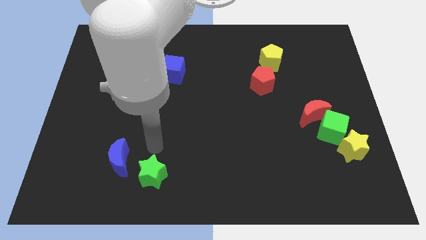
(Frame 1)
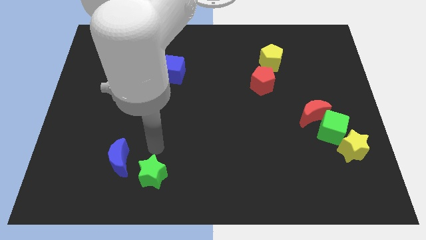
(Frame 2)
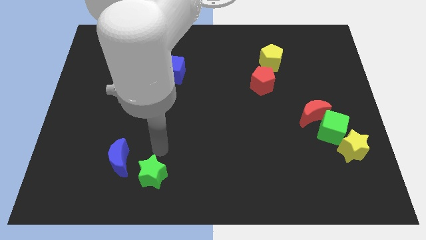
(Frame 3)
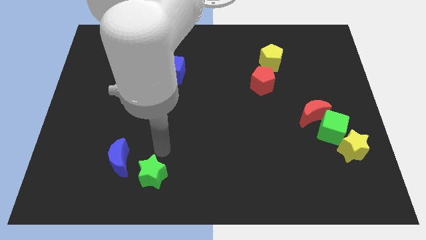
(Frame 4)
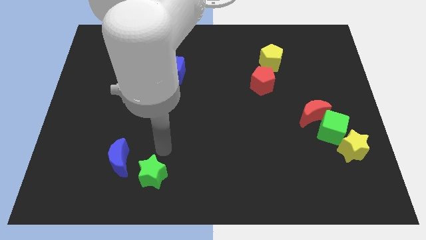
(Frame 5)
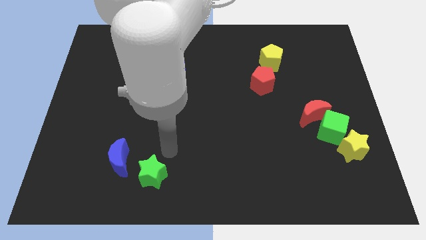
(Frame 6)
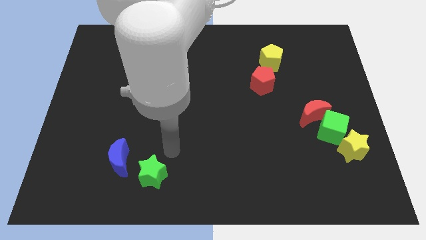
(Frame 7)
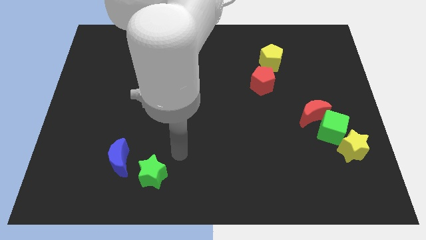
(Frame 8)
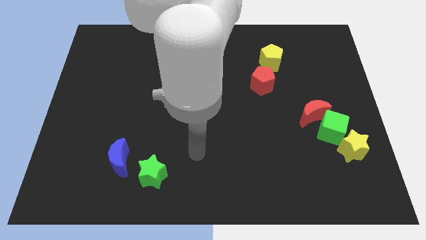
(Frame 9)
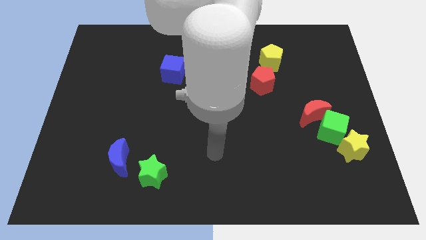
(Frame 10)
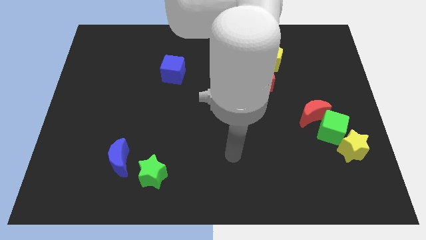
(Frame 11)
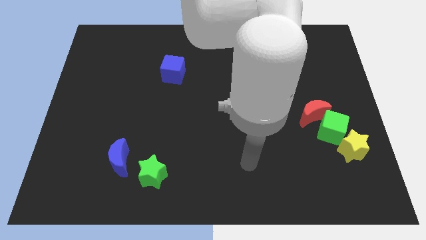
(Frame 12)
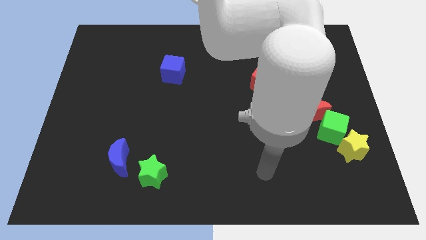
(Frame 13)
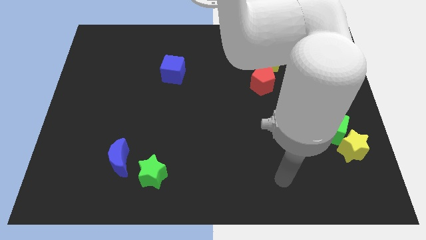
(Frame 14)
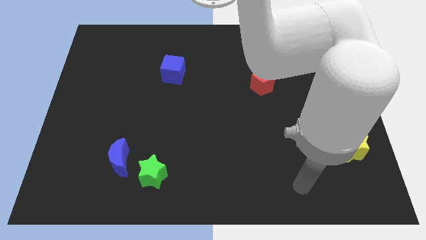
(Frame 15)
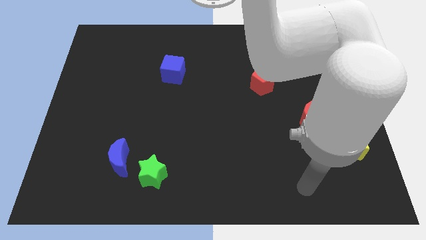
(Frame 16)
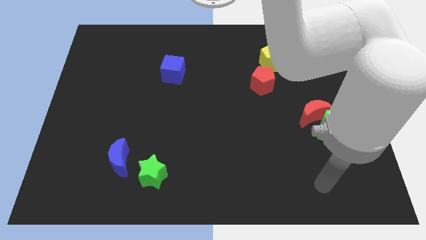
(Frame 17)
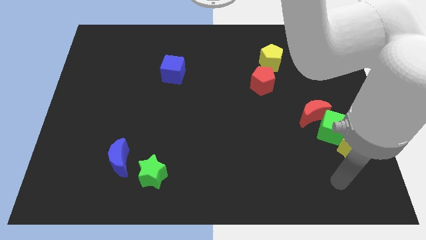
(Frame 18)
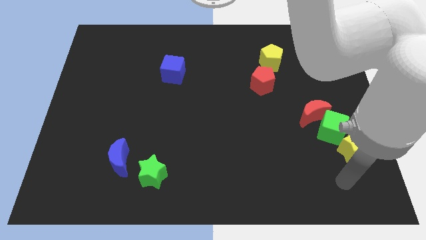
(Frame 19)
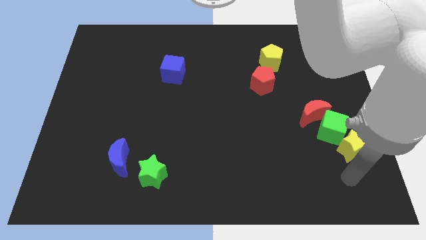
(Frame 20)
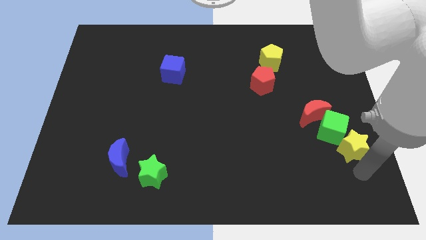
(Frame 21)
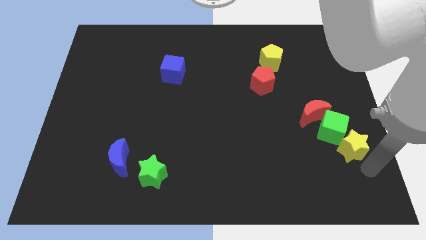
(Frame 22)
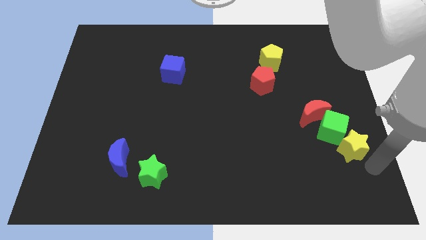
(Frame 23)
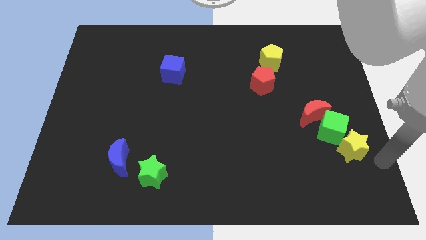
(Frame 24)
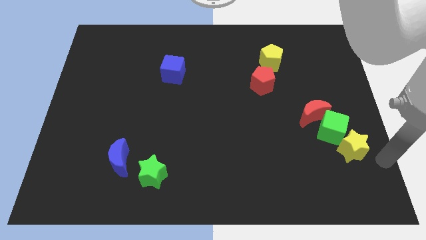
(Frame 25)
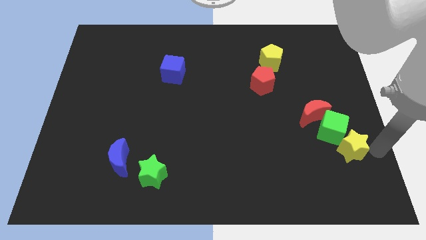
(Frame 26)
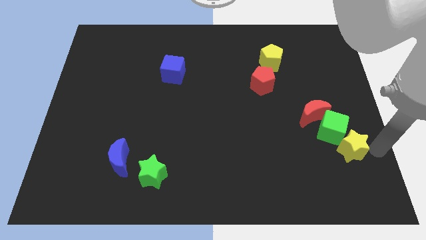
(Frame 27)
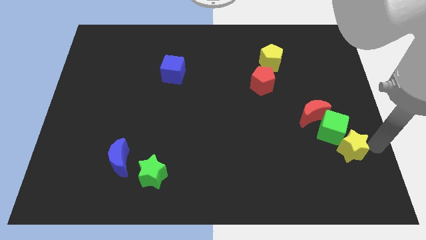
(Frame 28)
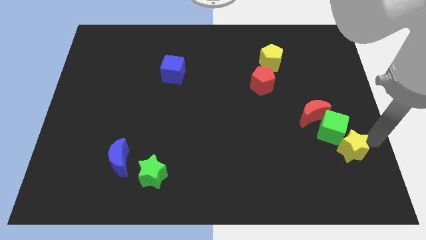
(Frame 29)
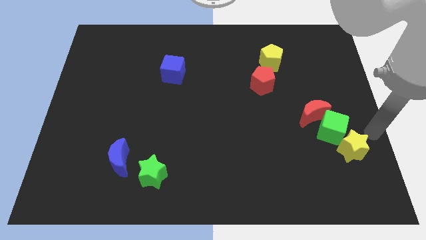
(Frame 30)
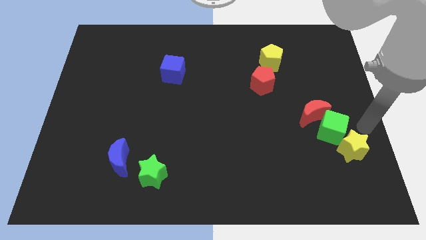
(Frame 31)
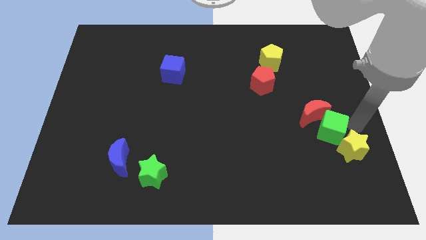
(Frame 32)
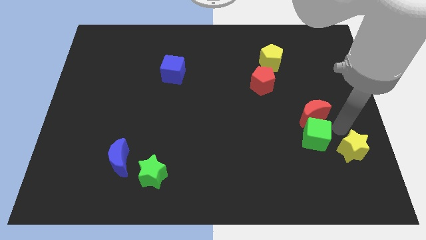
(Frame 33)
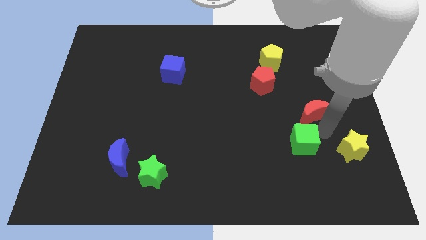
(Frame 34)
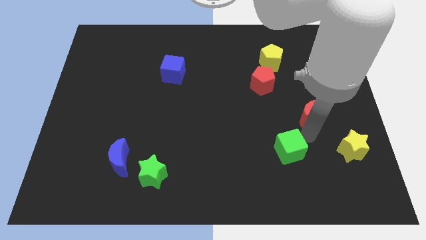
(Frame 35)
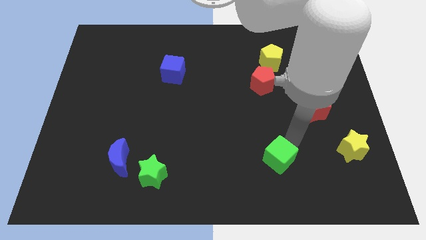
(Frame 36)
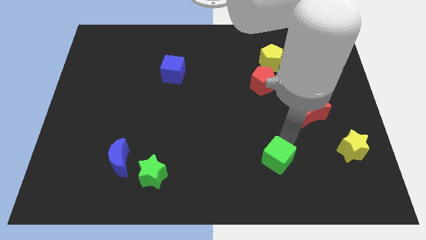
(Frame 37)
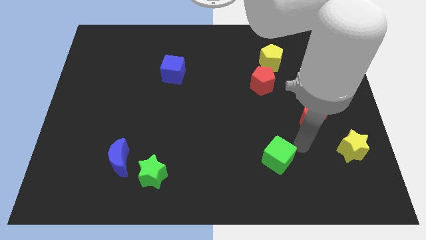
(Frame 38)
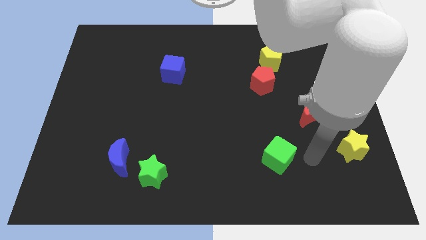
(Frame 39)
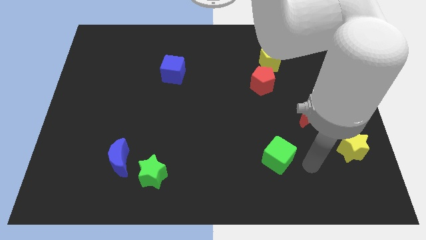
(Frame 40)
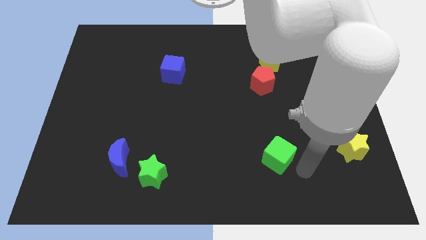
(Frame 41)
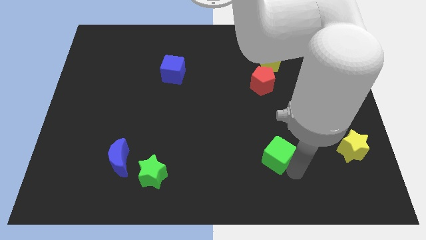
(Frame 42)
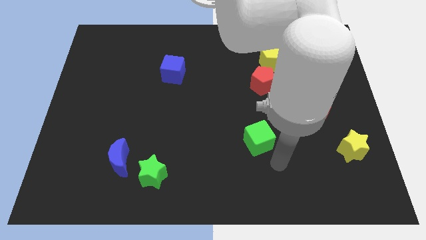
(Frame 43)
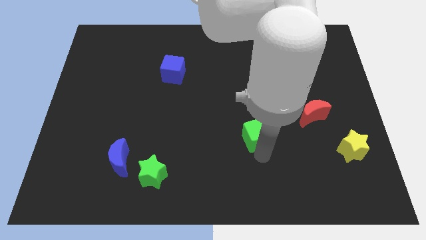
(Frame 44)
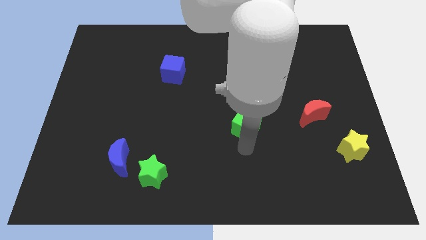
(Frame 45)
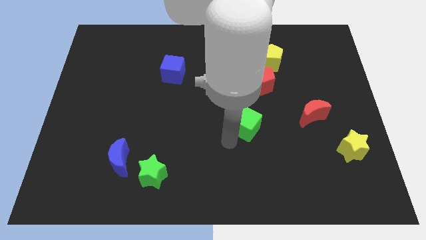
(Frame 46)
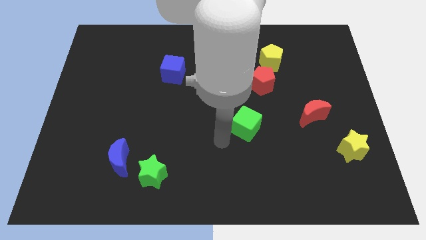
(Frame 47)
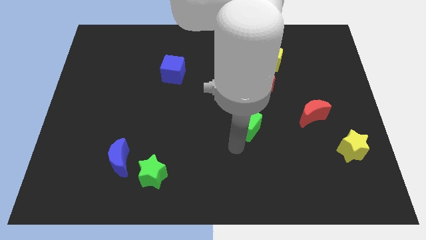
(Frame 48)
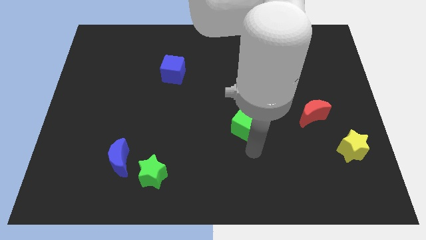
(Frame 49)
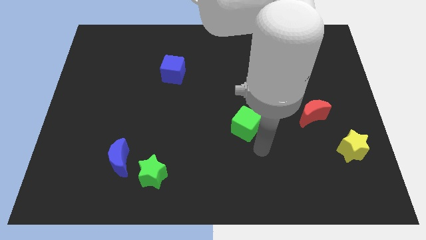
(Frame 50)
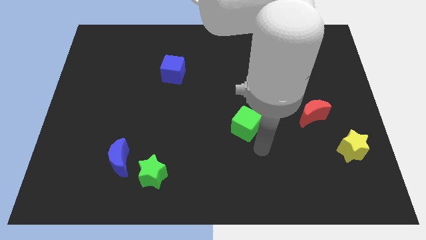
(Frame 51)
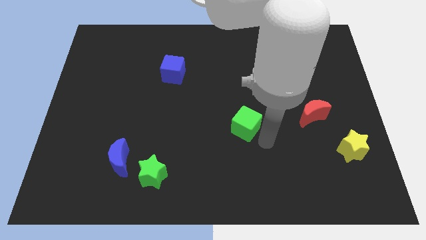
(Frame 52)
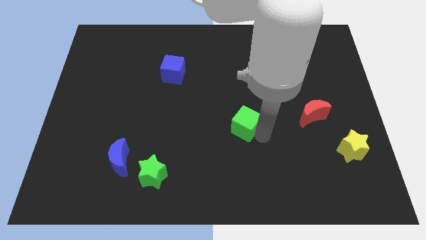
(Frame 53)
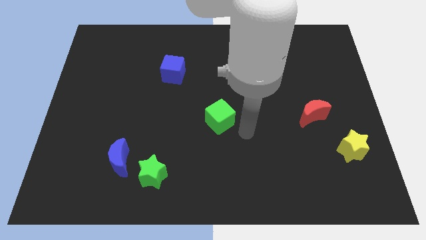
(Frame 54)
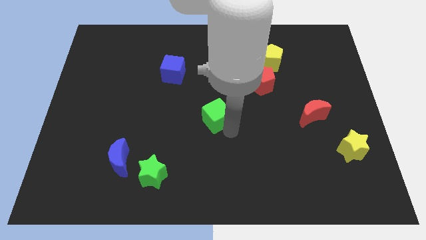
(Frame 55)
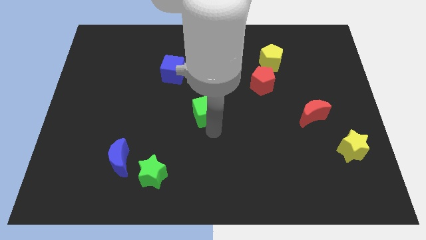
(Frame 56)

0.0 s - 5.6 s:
place the green cube in between green star and red pentagon

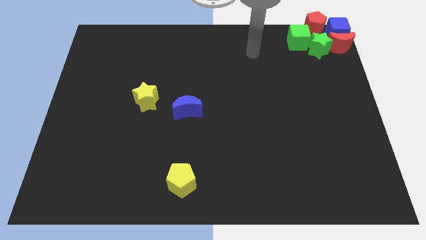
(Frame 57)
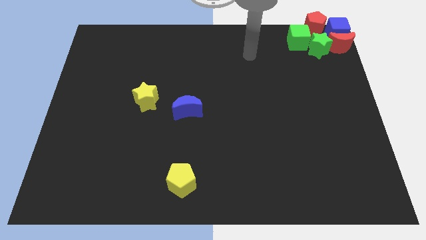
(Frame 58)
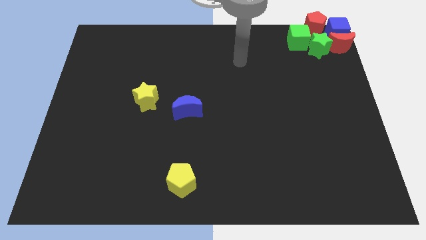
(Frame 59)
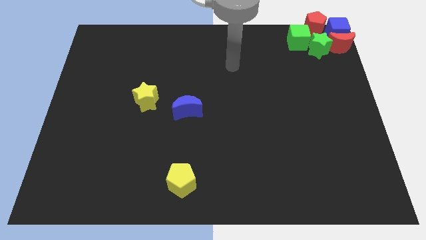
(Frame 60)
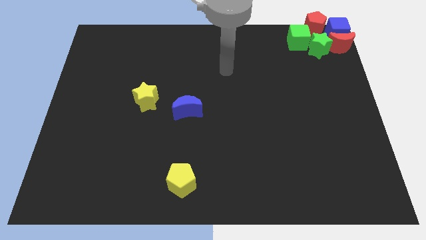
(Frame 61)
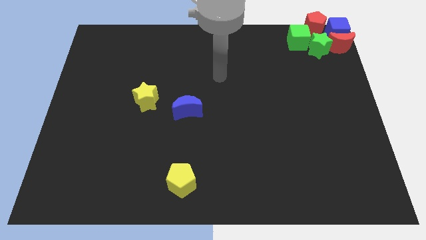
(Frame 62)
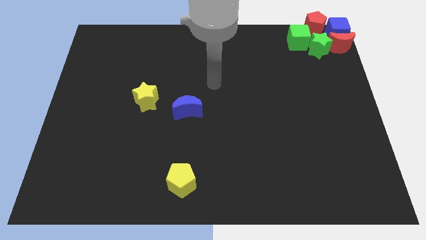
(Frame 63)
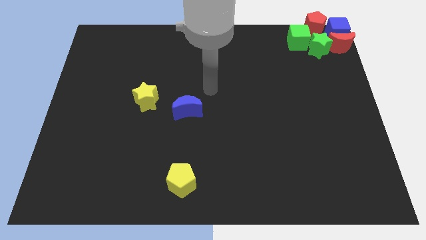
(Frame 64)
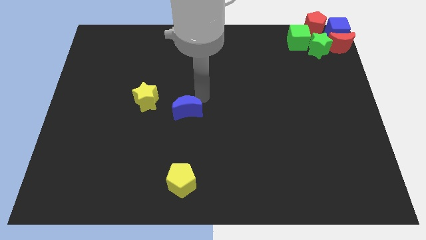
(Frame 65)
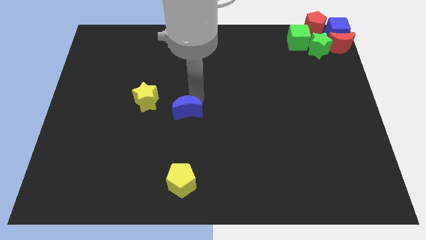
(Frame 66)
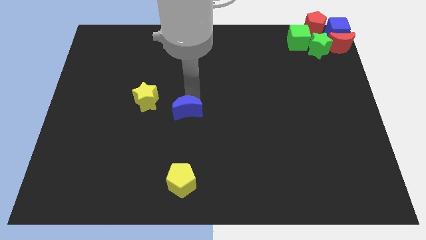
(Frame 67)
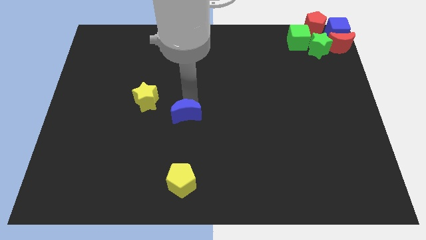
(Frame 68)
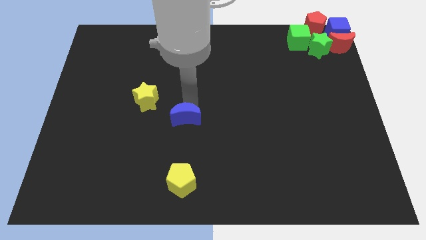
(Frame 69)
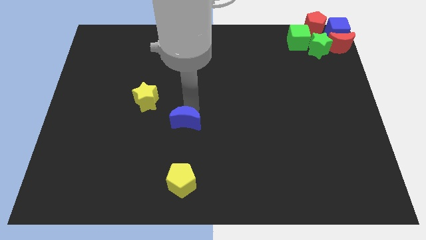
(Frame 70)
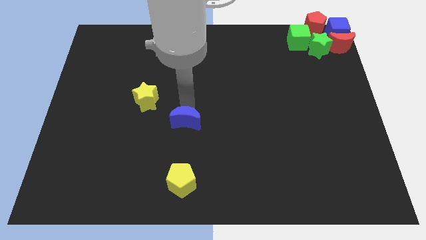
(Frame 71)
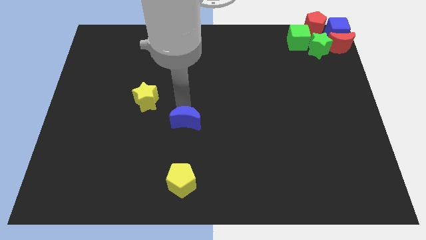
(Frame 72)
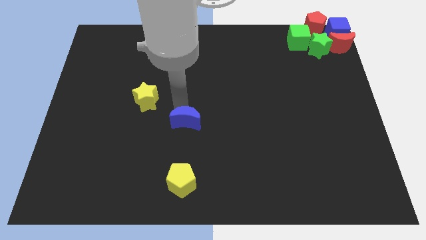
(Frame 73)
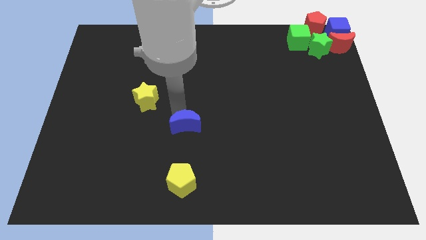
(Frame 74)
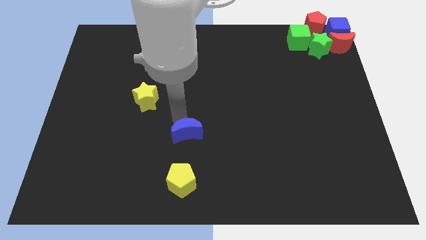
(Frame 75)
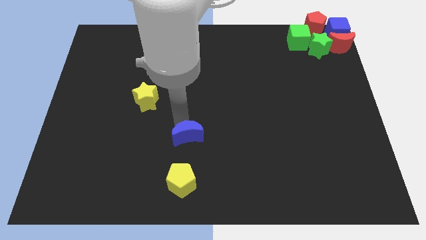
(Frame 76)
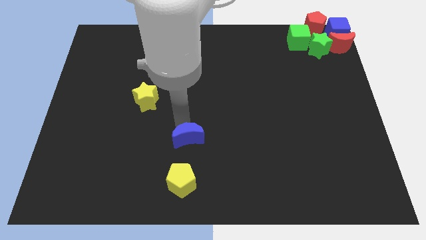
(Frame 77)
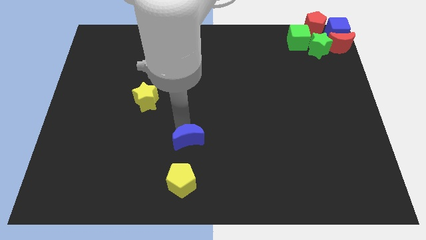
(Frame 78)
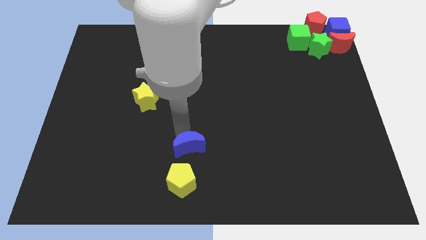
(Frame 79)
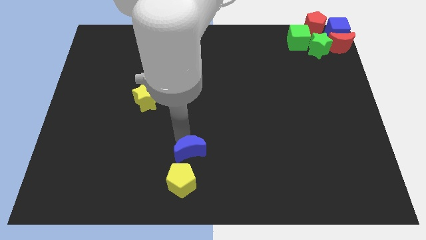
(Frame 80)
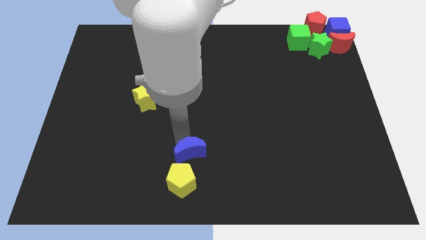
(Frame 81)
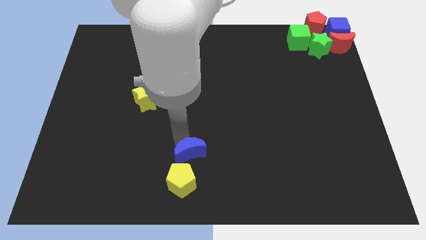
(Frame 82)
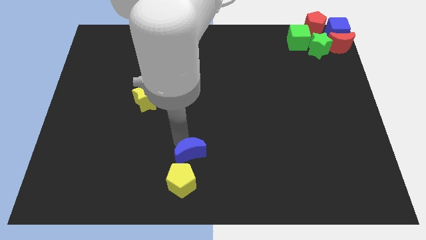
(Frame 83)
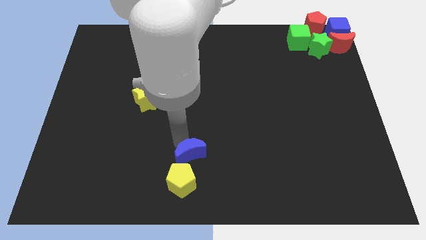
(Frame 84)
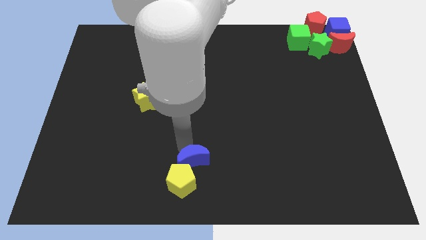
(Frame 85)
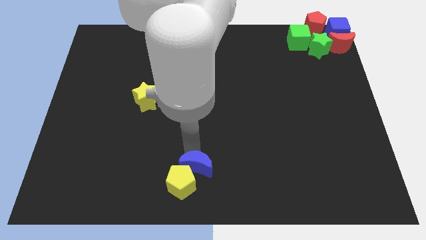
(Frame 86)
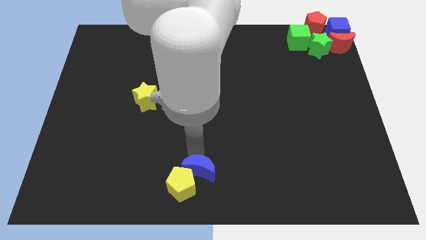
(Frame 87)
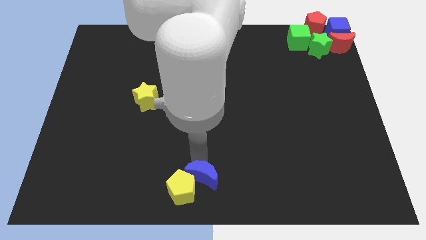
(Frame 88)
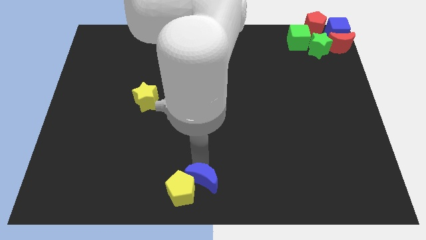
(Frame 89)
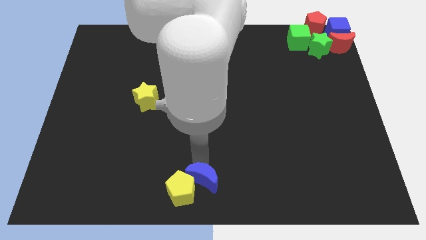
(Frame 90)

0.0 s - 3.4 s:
move the blue crescent into the yellow pentagon at the bottom

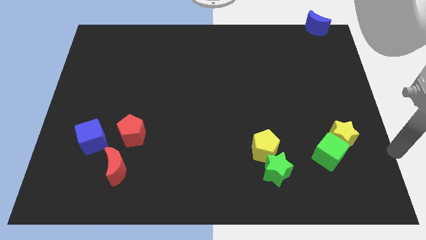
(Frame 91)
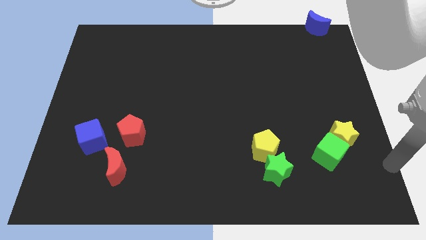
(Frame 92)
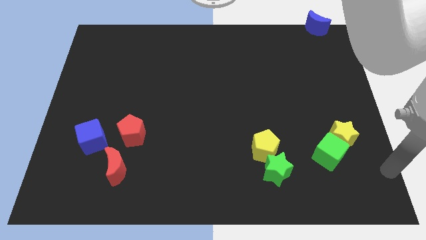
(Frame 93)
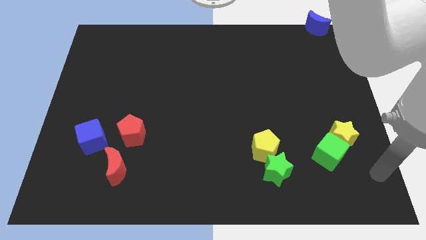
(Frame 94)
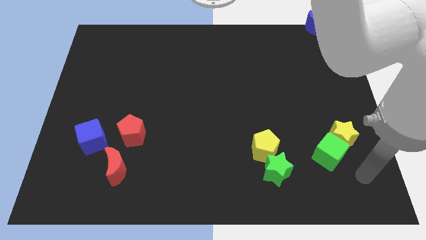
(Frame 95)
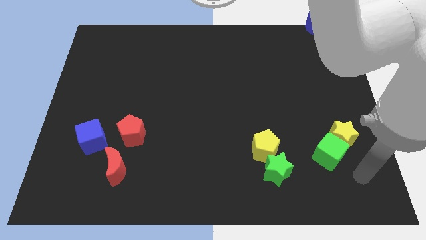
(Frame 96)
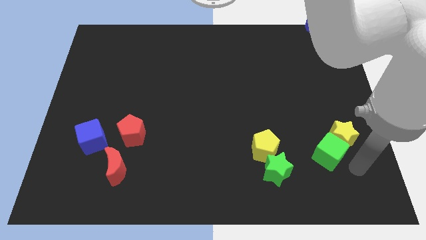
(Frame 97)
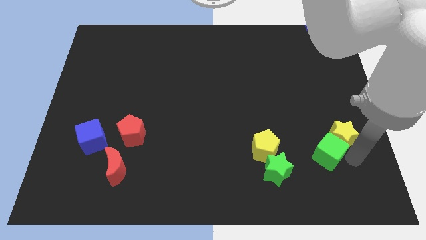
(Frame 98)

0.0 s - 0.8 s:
put your arm to the right side of green cube
